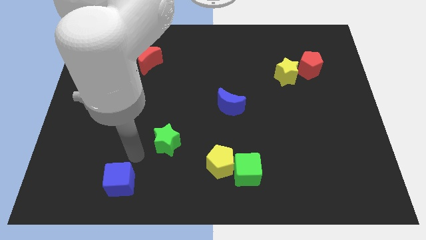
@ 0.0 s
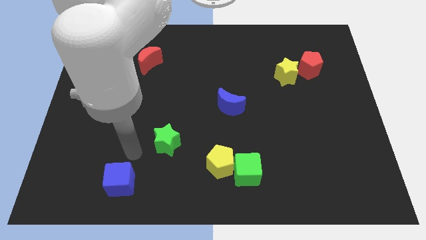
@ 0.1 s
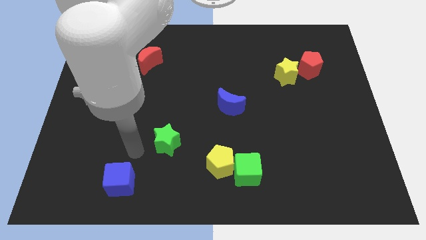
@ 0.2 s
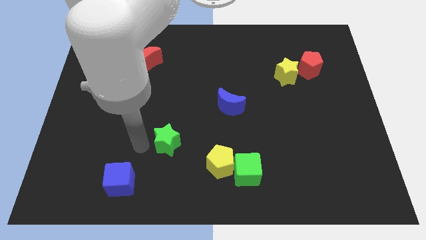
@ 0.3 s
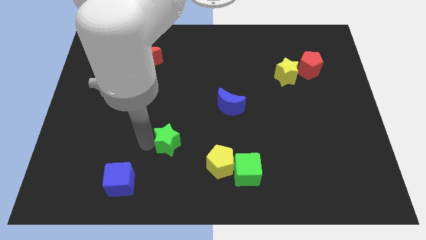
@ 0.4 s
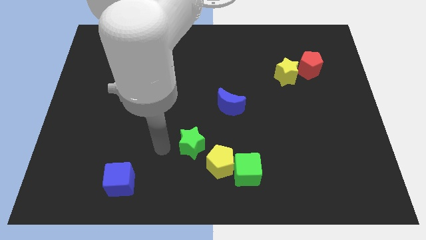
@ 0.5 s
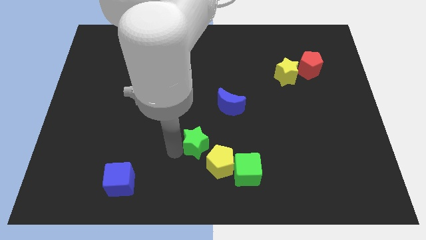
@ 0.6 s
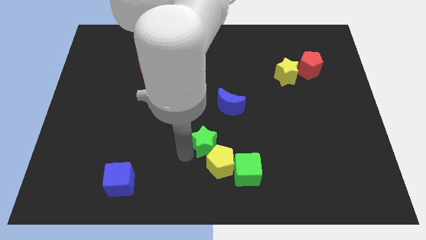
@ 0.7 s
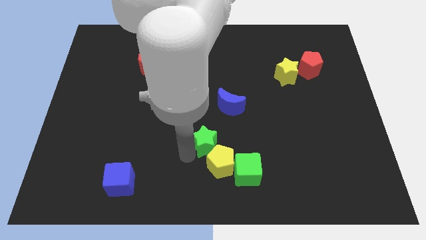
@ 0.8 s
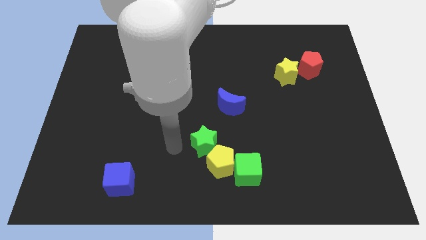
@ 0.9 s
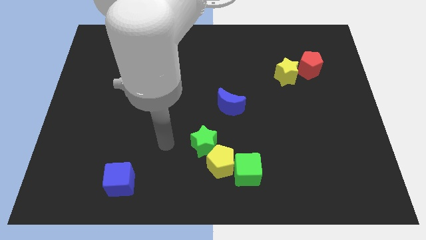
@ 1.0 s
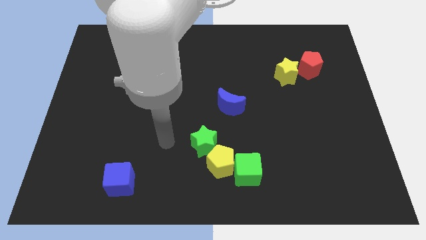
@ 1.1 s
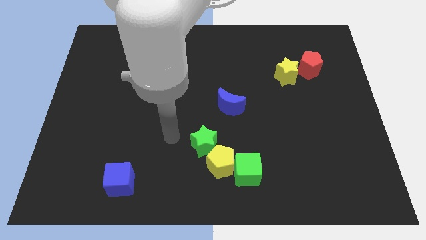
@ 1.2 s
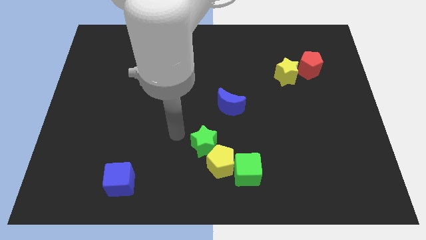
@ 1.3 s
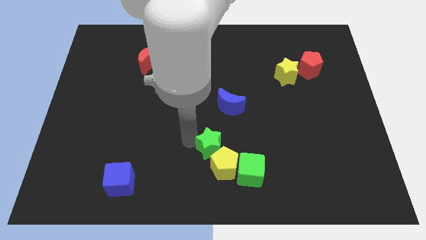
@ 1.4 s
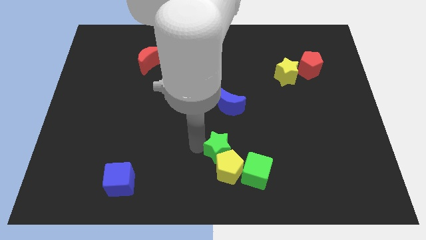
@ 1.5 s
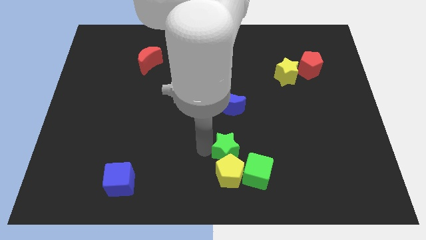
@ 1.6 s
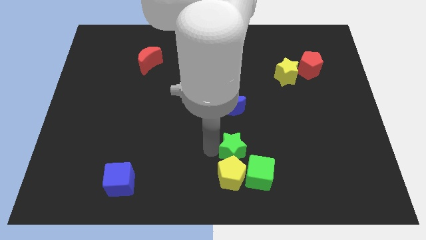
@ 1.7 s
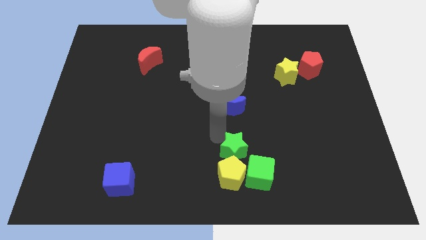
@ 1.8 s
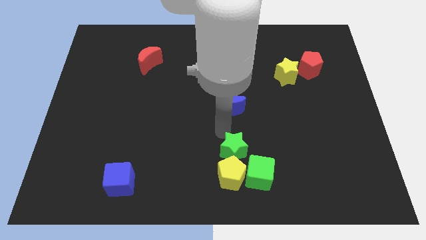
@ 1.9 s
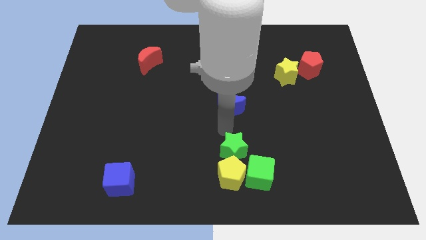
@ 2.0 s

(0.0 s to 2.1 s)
push green star on top of yellow pentagon

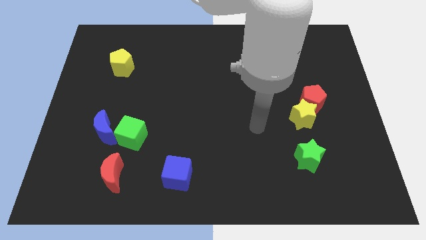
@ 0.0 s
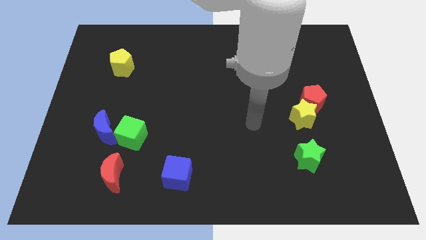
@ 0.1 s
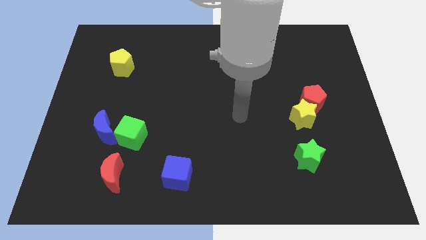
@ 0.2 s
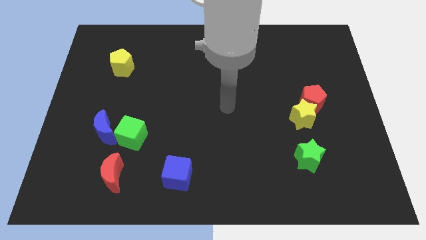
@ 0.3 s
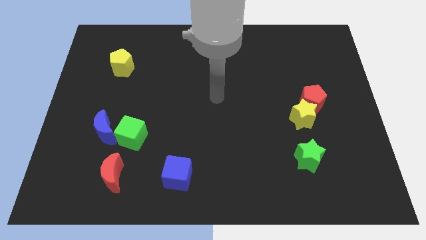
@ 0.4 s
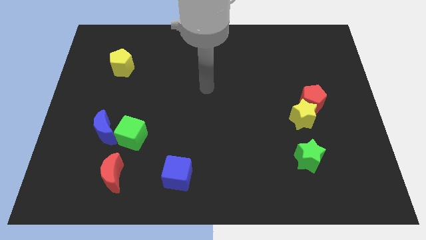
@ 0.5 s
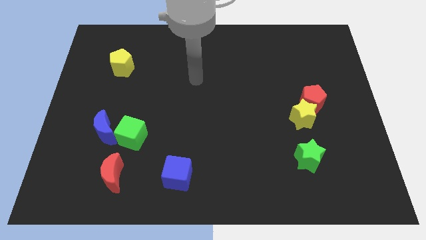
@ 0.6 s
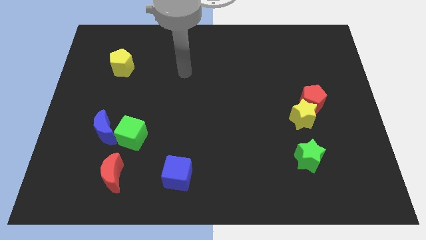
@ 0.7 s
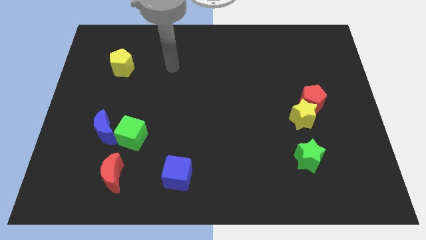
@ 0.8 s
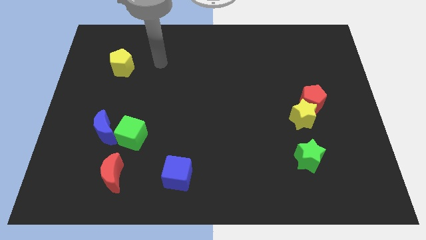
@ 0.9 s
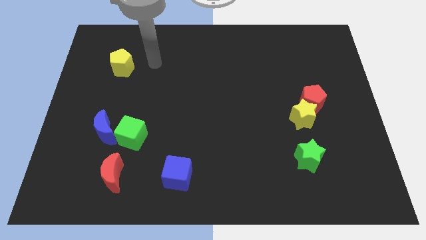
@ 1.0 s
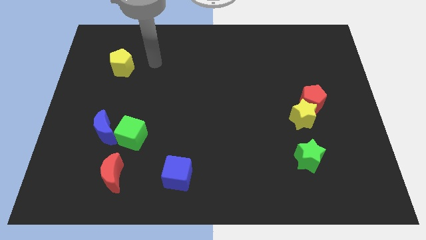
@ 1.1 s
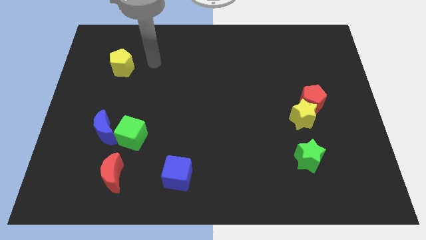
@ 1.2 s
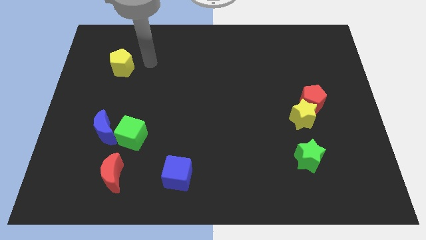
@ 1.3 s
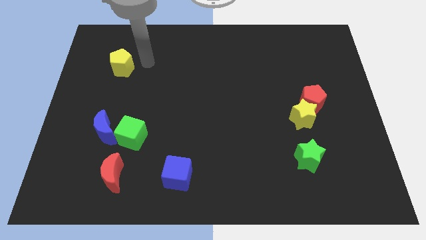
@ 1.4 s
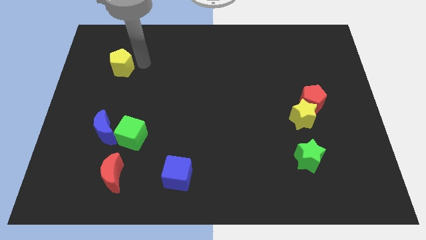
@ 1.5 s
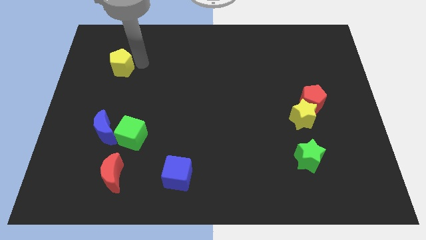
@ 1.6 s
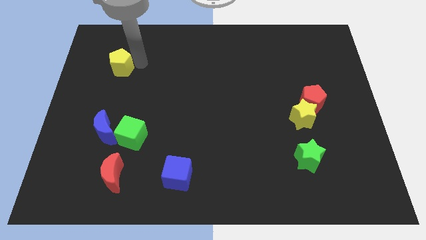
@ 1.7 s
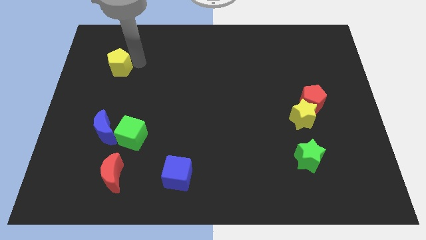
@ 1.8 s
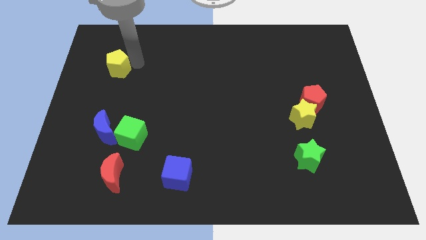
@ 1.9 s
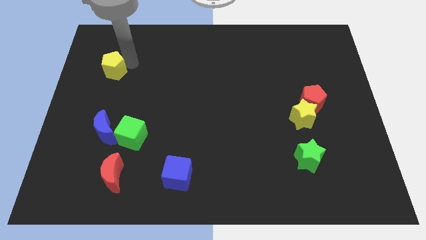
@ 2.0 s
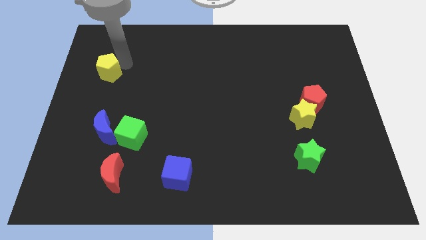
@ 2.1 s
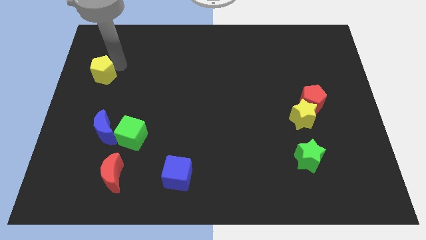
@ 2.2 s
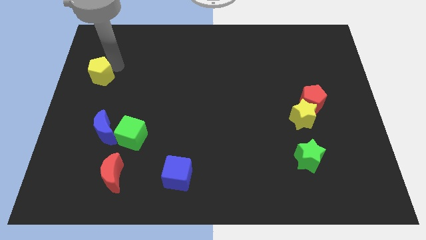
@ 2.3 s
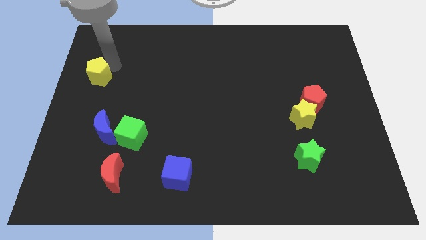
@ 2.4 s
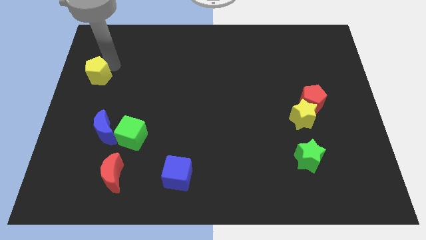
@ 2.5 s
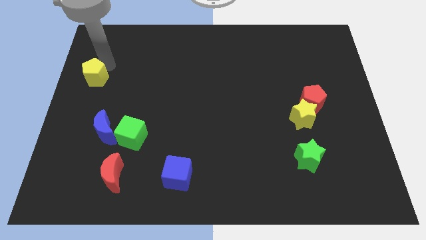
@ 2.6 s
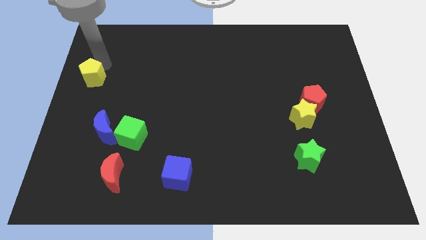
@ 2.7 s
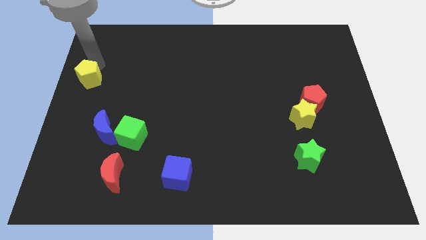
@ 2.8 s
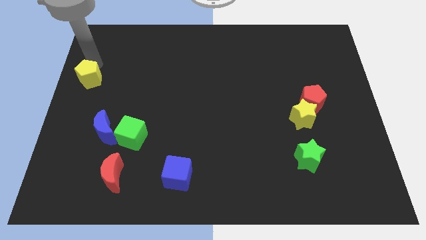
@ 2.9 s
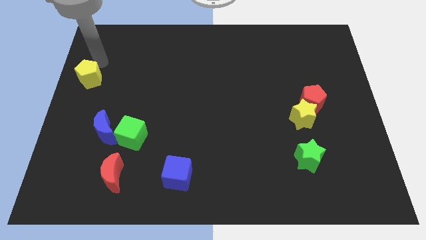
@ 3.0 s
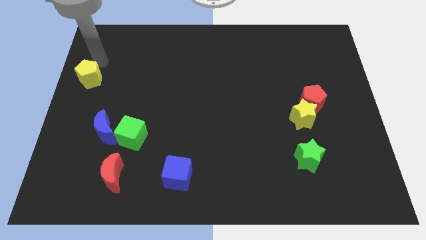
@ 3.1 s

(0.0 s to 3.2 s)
move the yellow pentagon slightly to the left side of the board

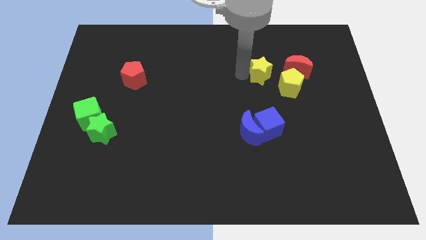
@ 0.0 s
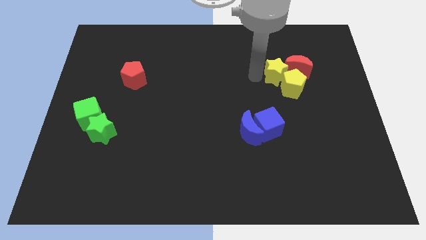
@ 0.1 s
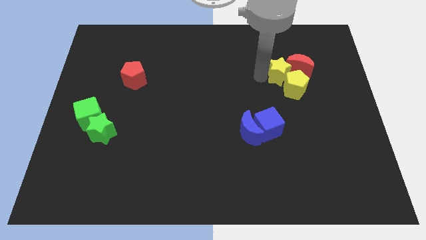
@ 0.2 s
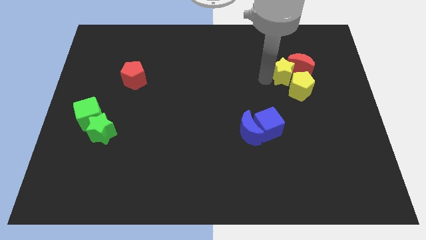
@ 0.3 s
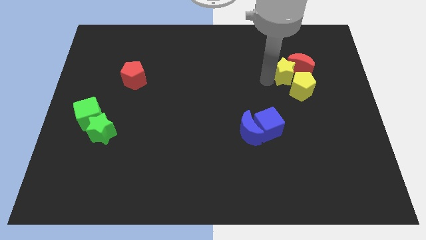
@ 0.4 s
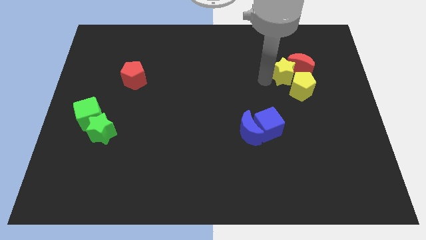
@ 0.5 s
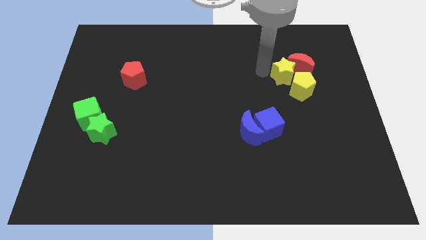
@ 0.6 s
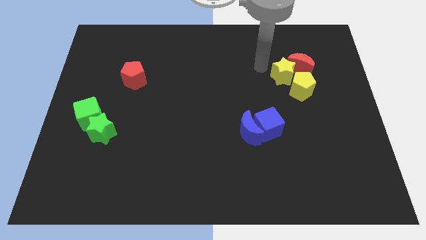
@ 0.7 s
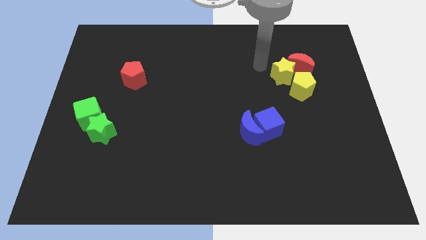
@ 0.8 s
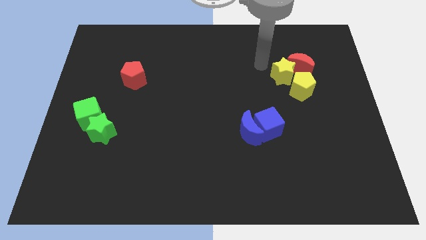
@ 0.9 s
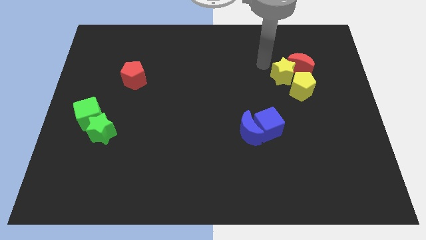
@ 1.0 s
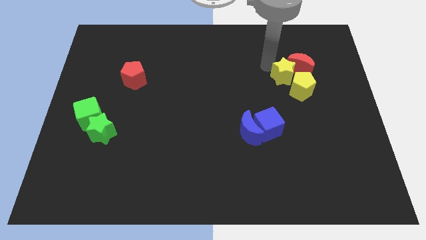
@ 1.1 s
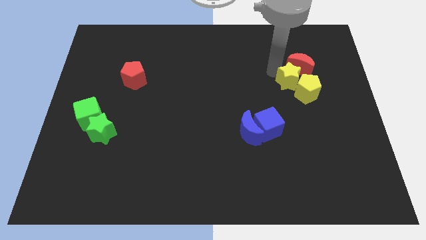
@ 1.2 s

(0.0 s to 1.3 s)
push the yellow star into the yellow pentagon

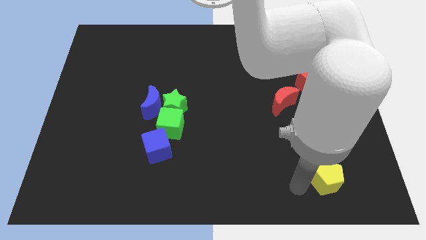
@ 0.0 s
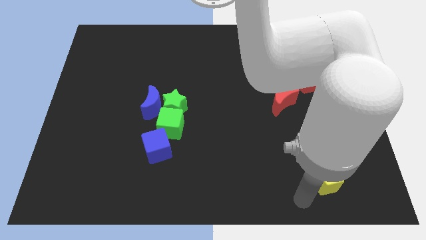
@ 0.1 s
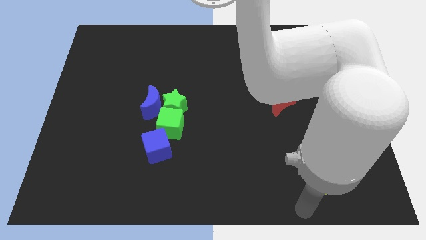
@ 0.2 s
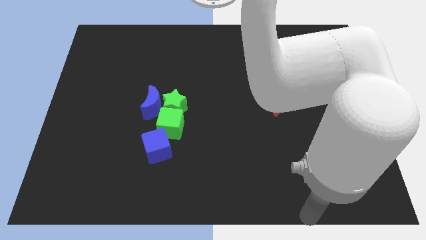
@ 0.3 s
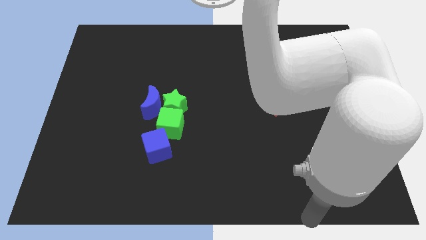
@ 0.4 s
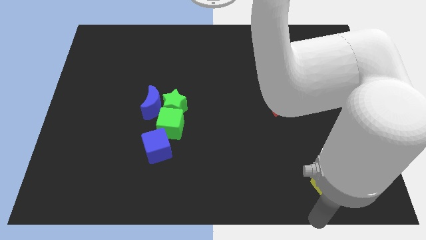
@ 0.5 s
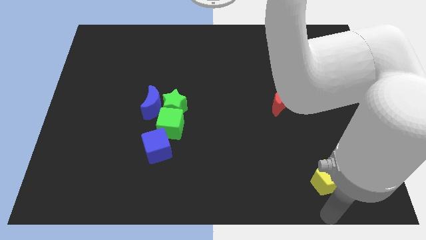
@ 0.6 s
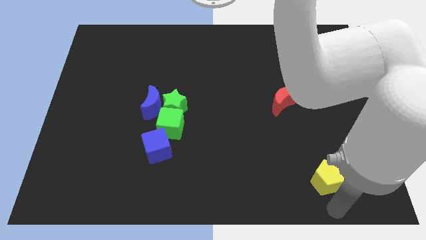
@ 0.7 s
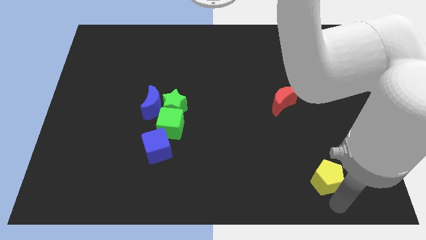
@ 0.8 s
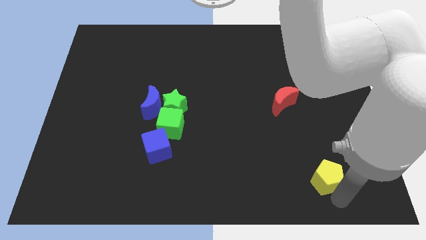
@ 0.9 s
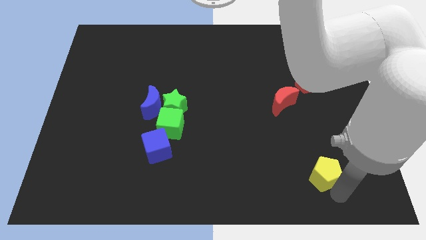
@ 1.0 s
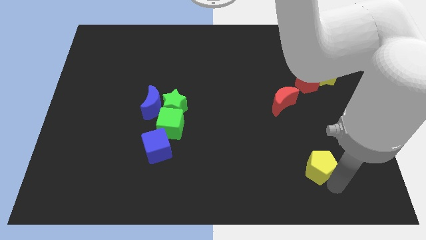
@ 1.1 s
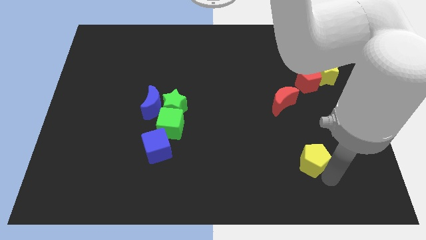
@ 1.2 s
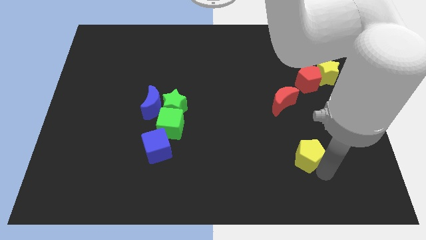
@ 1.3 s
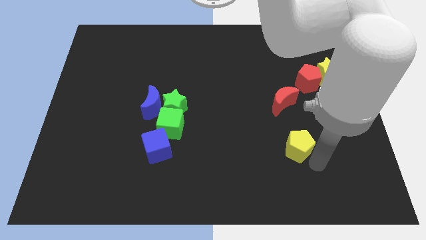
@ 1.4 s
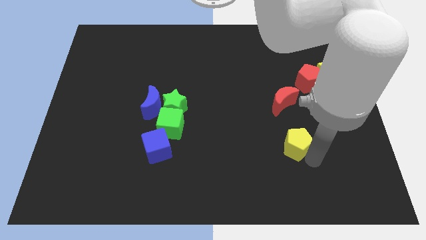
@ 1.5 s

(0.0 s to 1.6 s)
place the yellow pentagon to the center

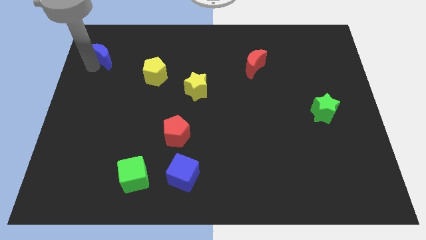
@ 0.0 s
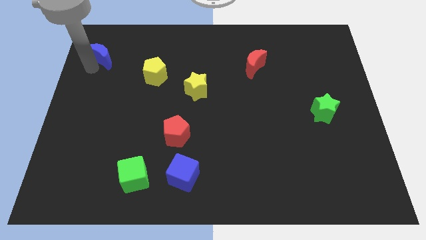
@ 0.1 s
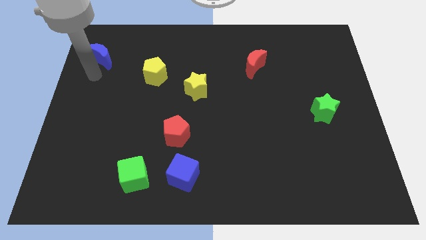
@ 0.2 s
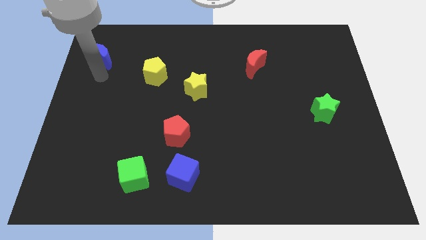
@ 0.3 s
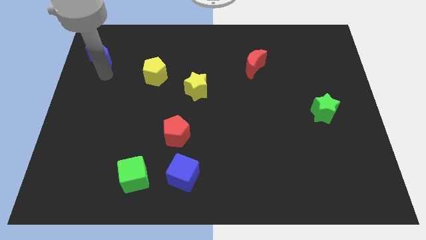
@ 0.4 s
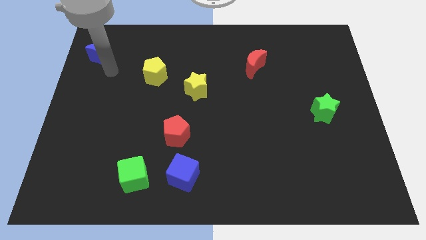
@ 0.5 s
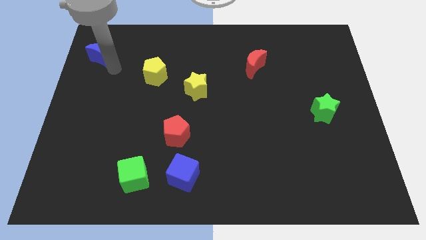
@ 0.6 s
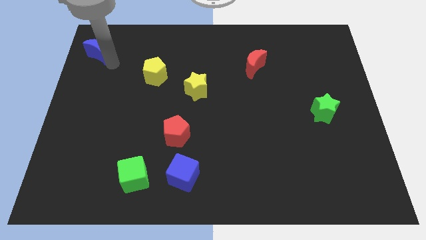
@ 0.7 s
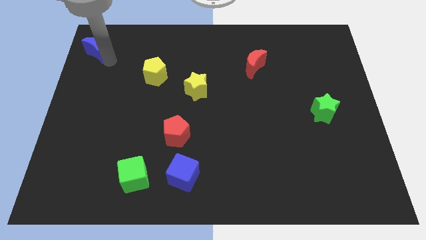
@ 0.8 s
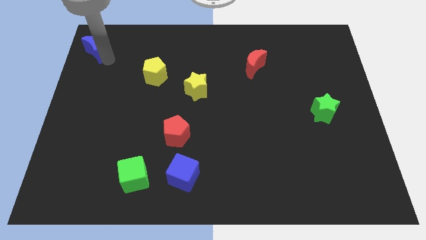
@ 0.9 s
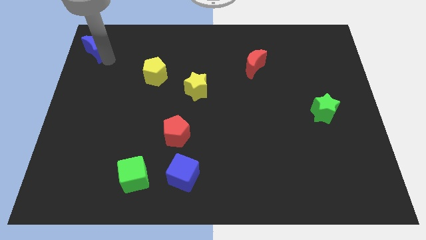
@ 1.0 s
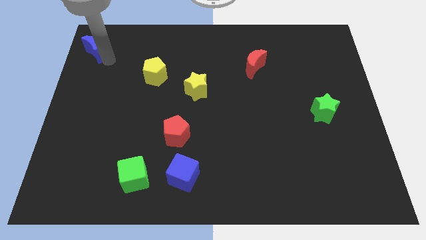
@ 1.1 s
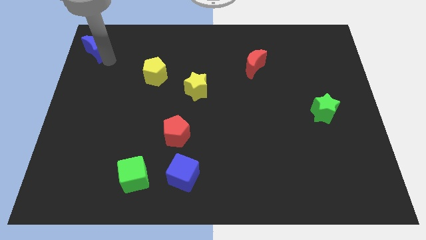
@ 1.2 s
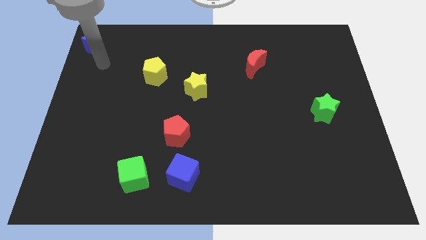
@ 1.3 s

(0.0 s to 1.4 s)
move blue moon to the top left
